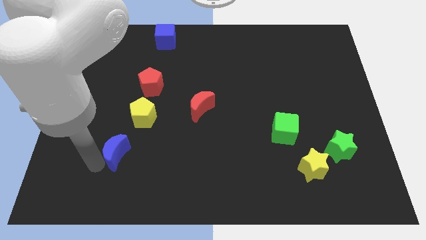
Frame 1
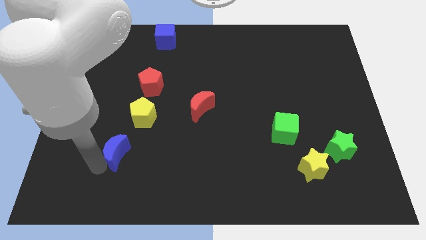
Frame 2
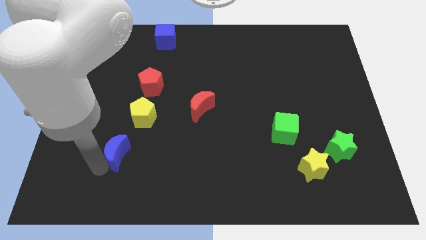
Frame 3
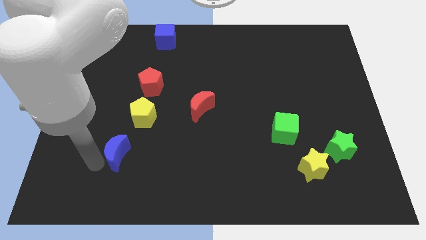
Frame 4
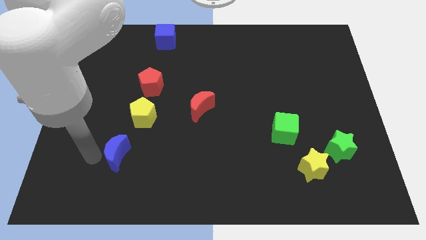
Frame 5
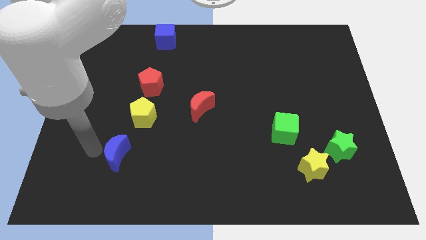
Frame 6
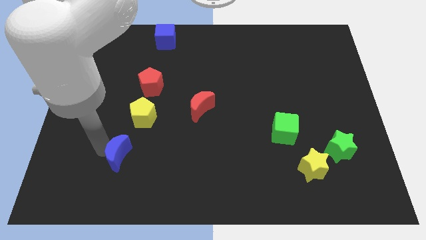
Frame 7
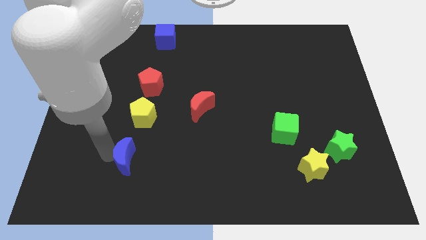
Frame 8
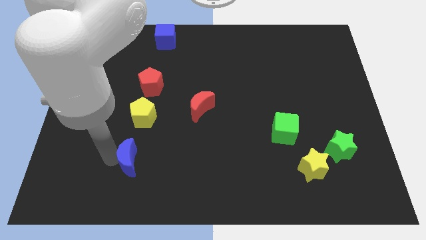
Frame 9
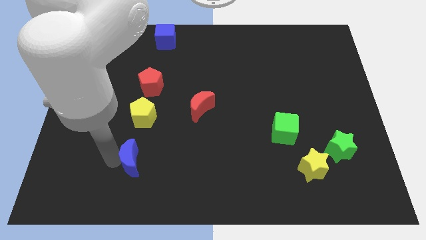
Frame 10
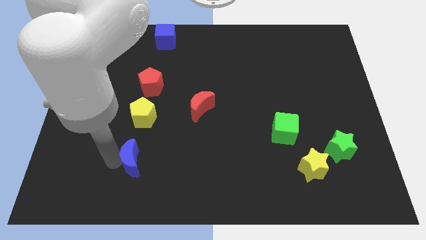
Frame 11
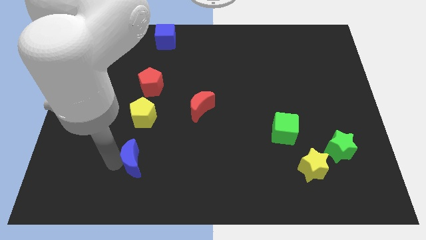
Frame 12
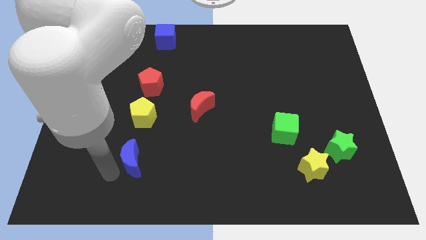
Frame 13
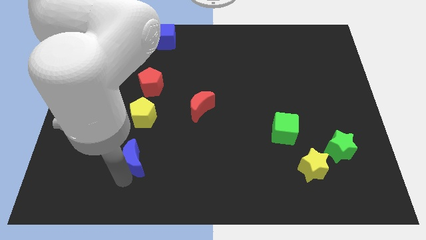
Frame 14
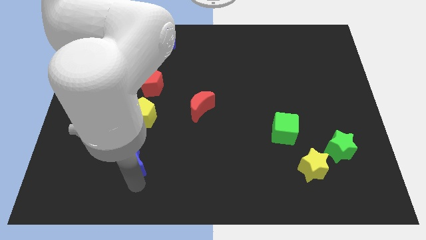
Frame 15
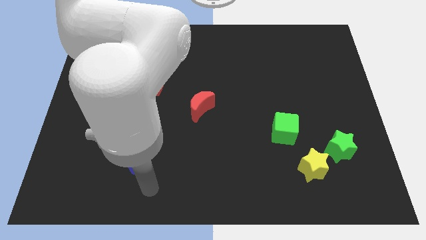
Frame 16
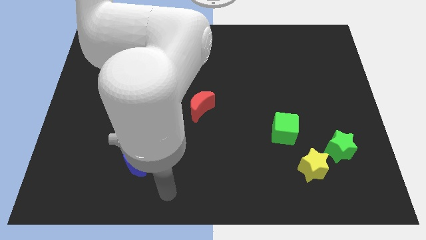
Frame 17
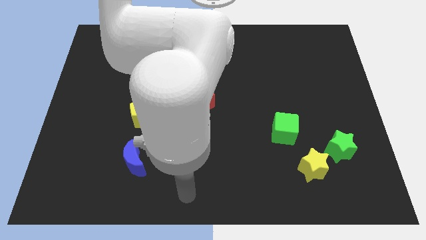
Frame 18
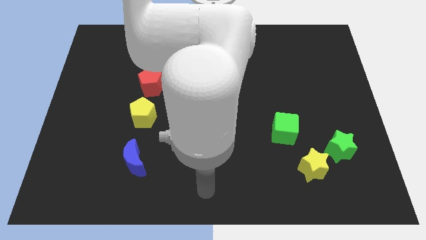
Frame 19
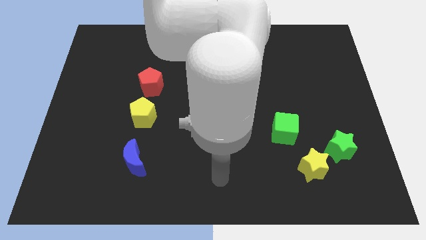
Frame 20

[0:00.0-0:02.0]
move the blue moon to the bottom of the yellow pentagon

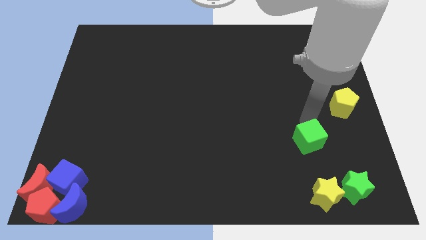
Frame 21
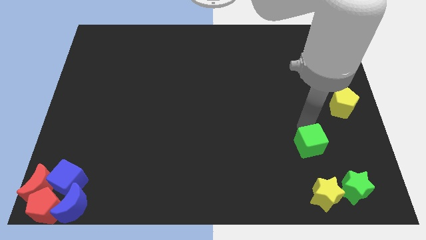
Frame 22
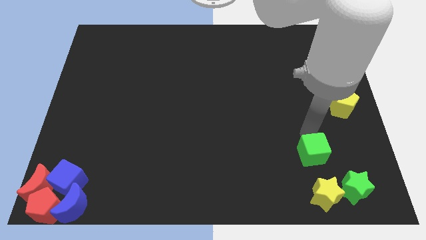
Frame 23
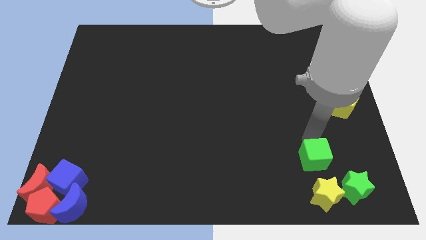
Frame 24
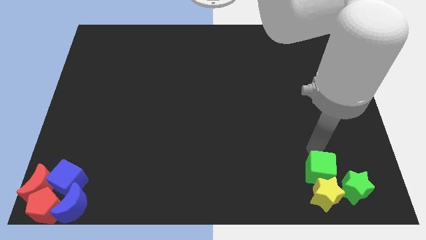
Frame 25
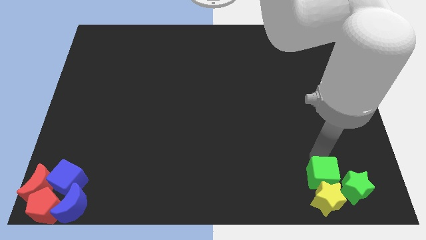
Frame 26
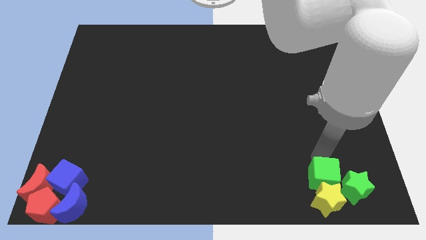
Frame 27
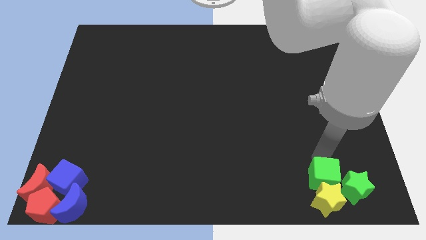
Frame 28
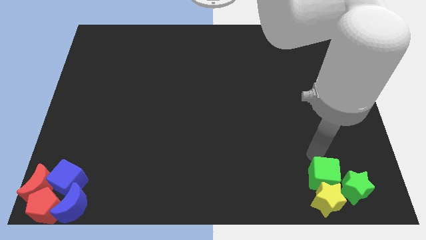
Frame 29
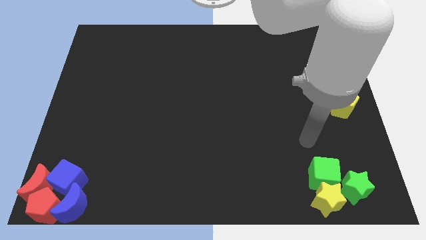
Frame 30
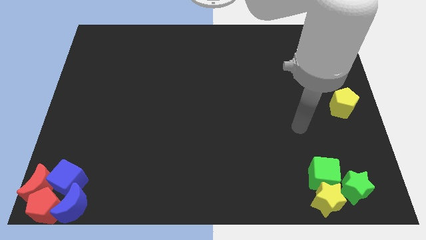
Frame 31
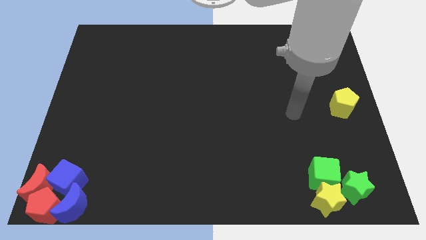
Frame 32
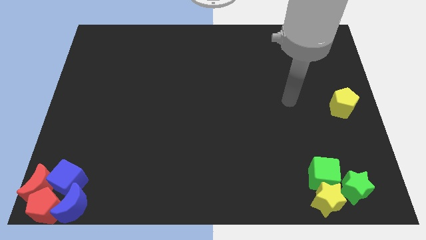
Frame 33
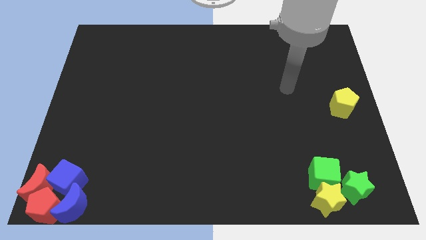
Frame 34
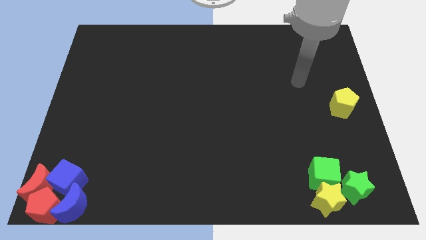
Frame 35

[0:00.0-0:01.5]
move the green cube above the yellow star

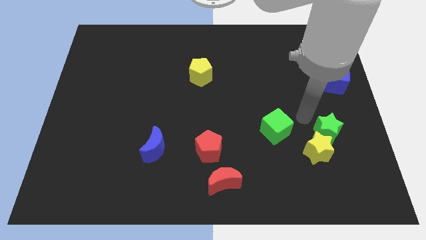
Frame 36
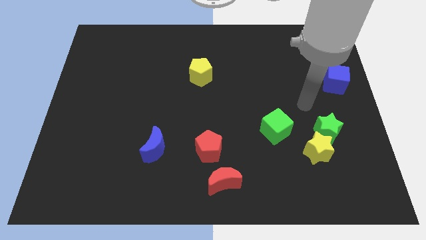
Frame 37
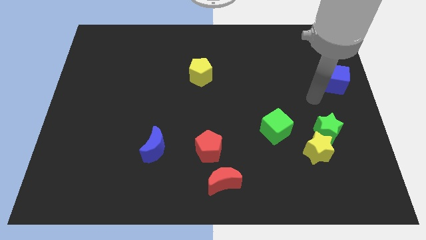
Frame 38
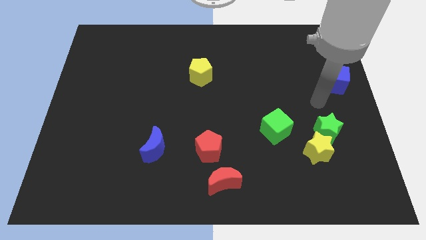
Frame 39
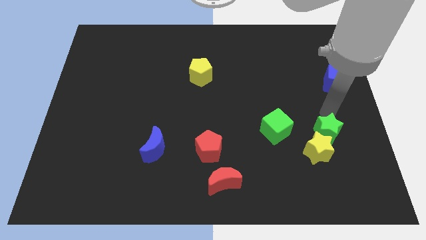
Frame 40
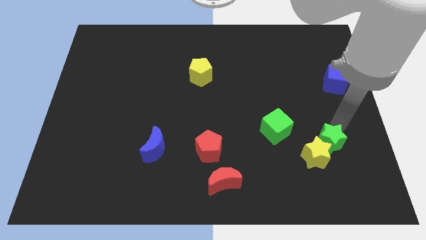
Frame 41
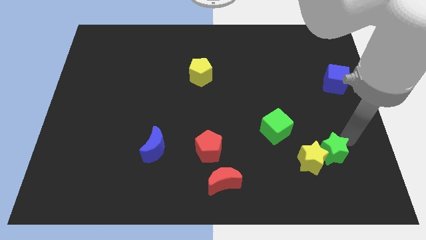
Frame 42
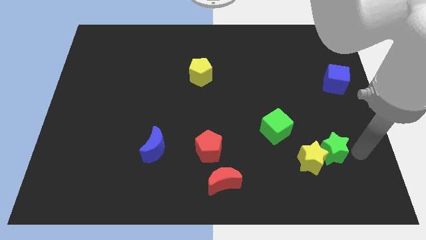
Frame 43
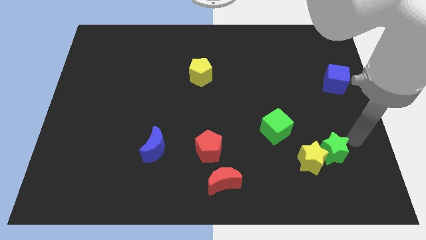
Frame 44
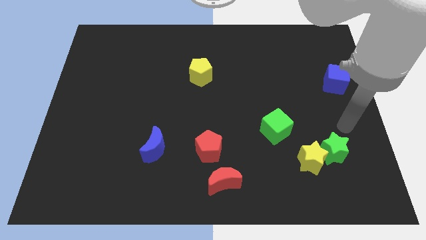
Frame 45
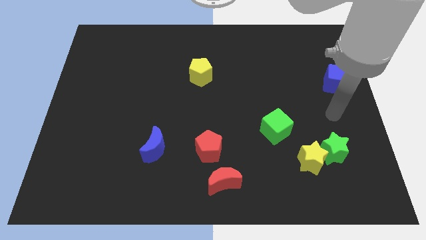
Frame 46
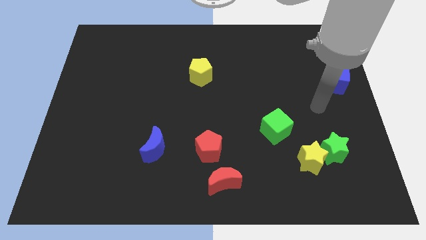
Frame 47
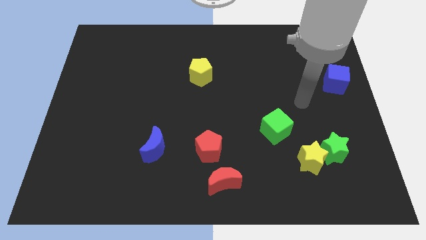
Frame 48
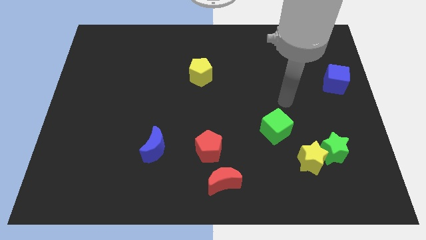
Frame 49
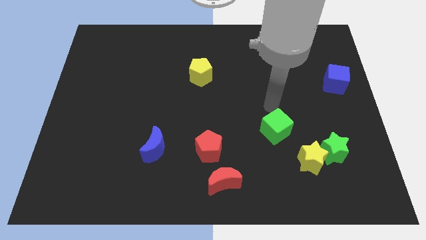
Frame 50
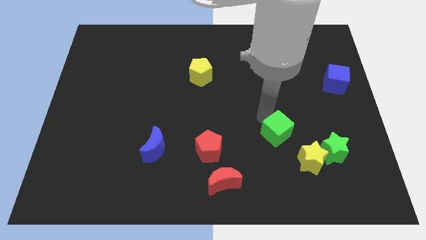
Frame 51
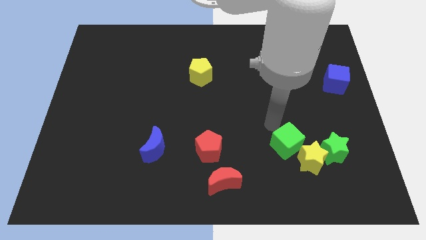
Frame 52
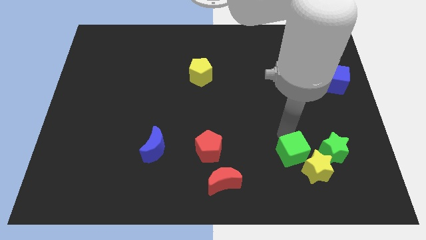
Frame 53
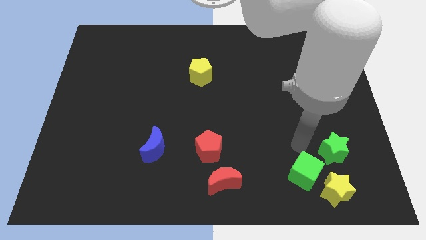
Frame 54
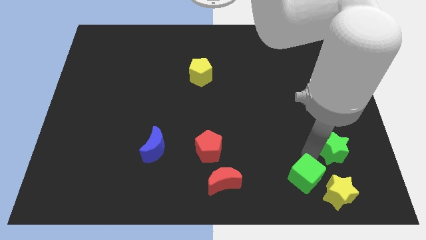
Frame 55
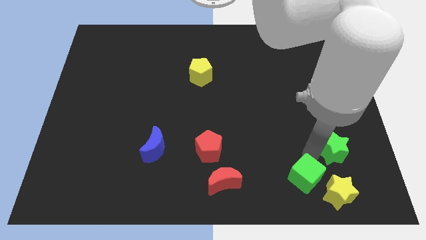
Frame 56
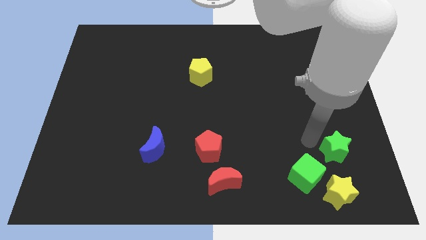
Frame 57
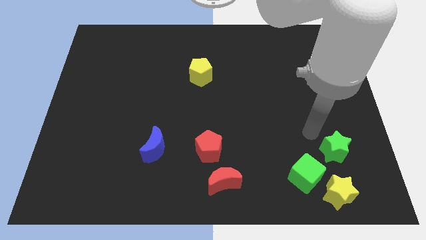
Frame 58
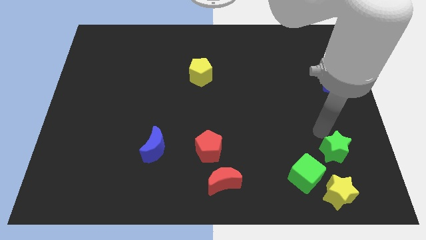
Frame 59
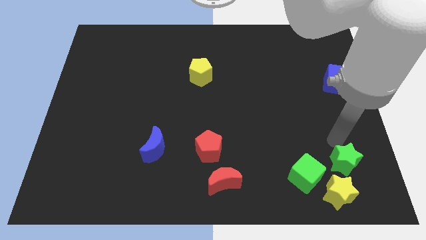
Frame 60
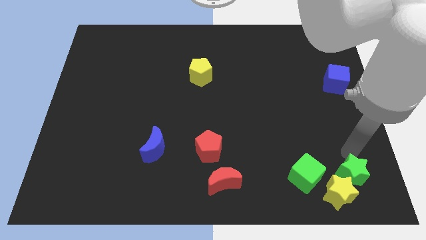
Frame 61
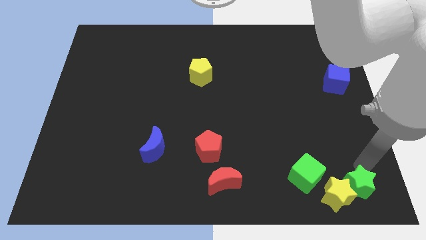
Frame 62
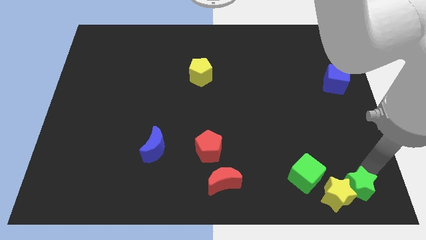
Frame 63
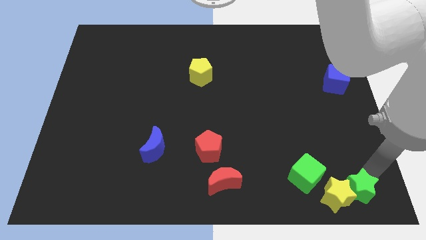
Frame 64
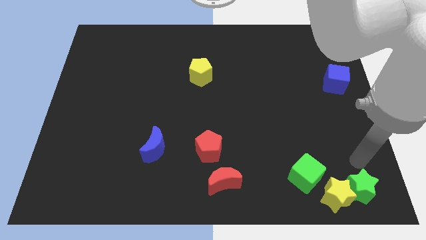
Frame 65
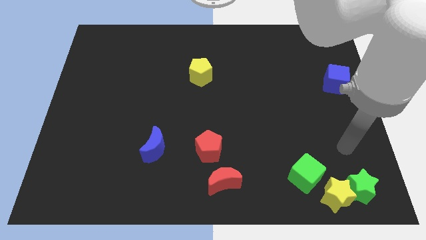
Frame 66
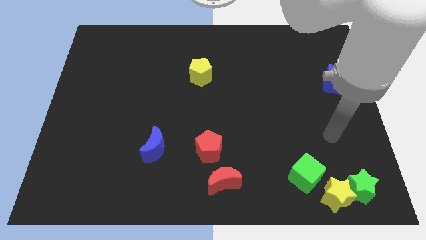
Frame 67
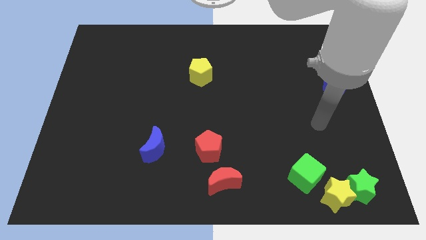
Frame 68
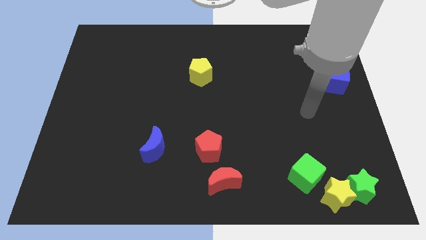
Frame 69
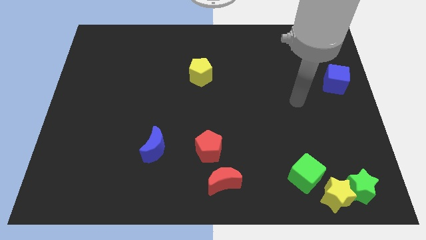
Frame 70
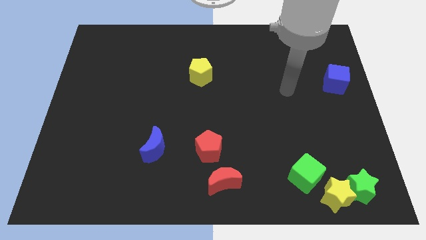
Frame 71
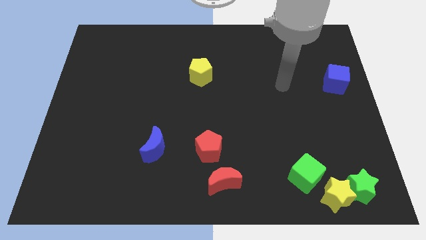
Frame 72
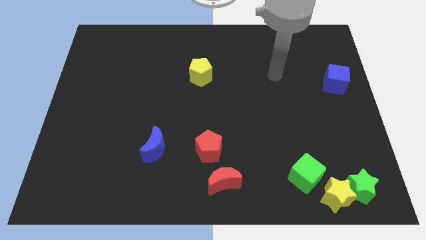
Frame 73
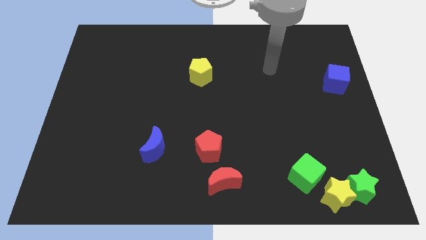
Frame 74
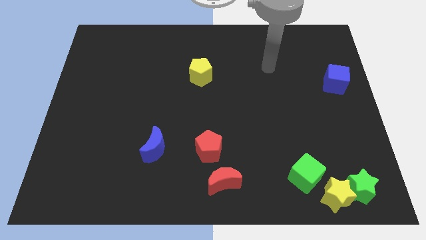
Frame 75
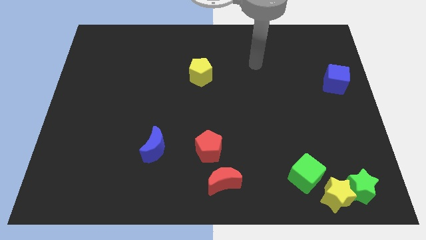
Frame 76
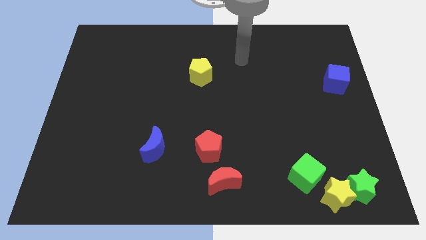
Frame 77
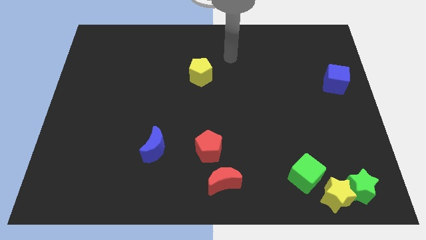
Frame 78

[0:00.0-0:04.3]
push the green cube into the yellow star

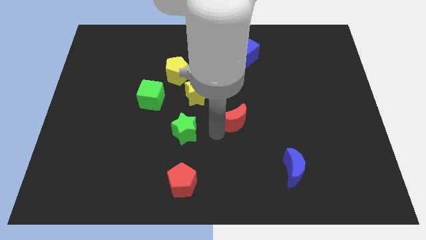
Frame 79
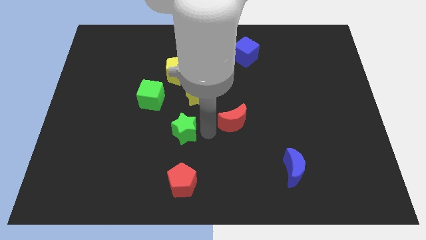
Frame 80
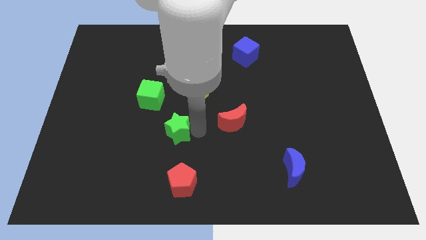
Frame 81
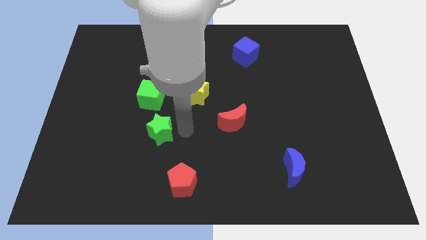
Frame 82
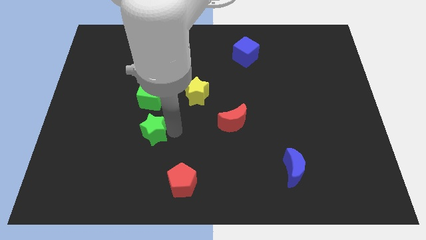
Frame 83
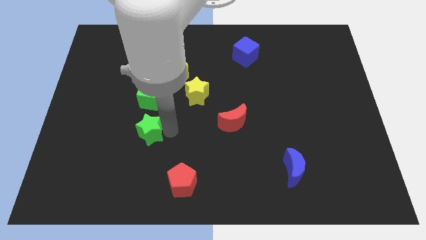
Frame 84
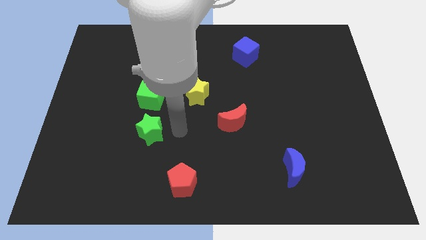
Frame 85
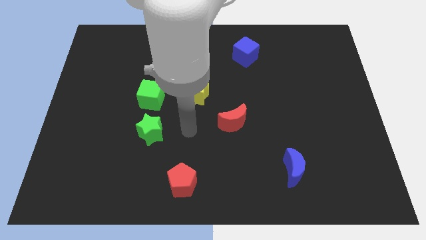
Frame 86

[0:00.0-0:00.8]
place the green star below the green cube

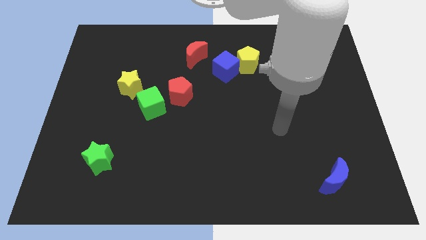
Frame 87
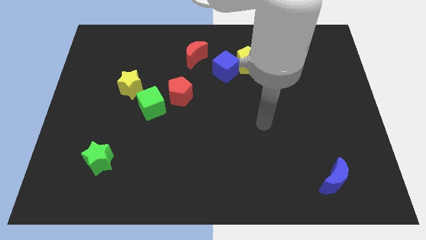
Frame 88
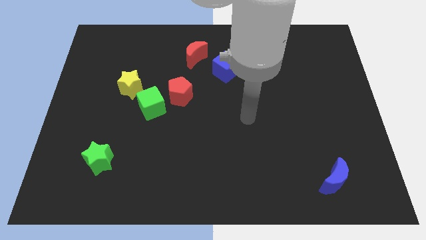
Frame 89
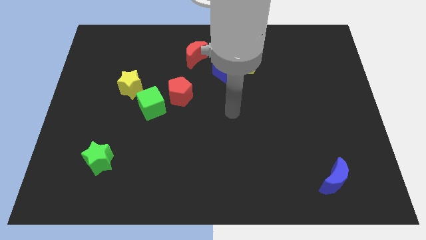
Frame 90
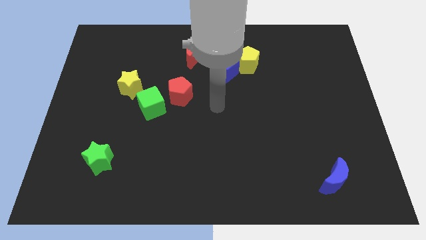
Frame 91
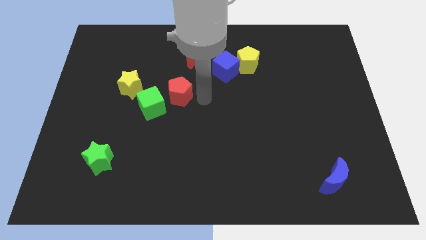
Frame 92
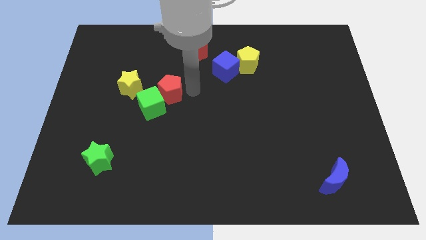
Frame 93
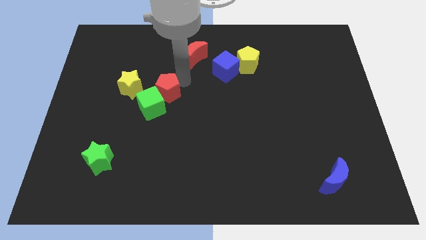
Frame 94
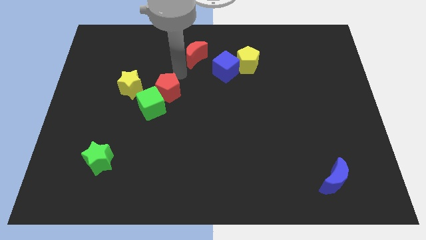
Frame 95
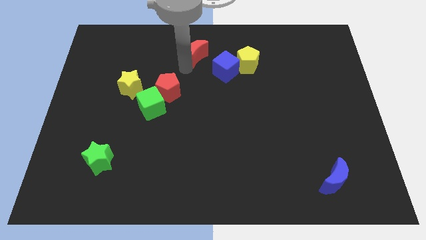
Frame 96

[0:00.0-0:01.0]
slightly touch right to the red pentagon
